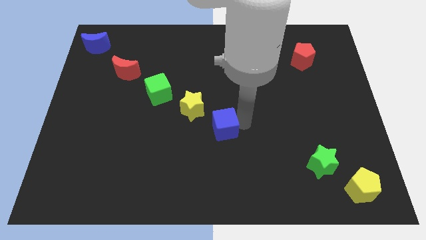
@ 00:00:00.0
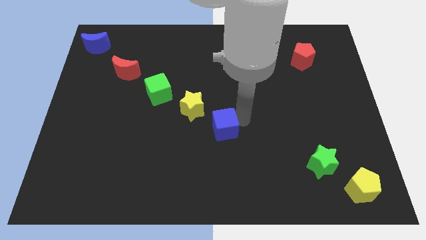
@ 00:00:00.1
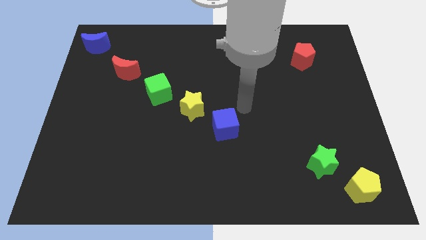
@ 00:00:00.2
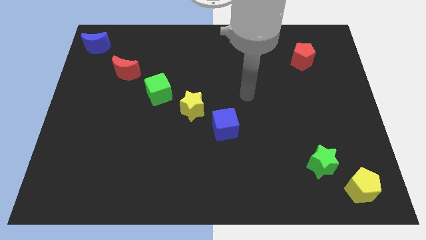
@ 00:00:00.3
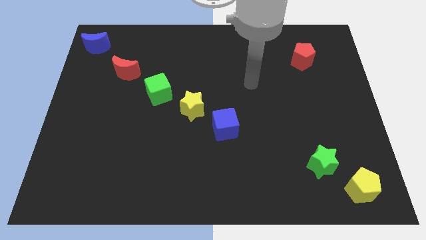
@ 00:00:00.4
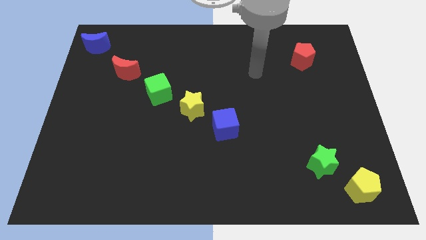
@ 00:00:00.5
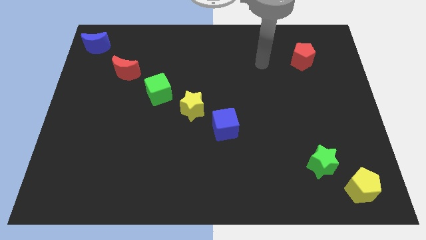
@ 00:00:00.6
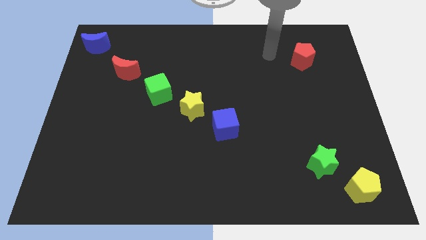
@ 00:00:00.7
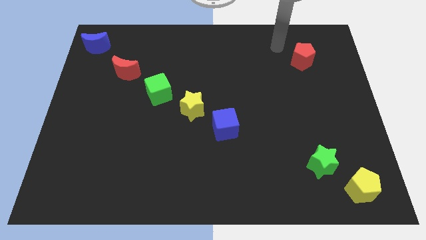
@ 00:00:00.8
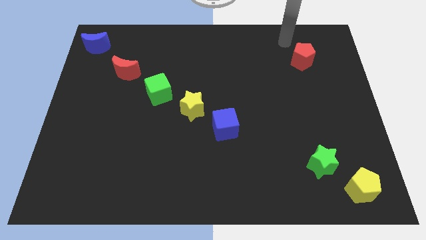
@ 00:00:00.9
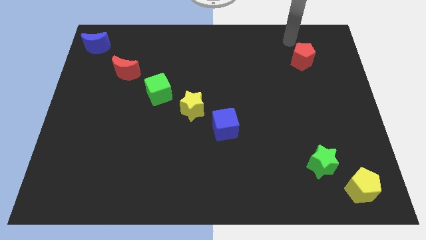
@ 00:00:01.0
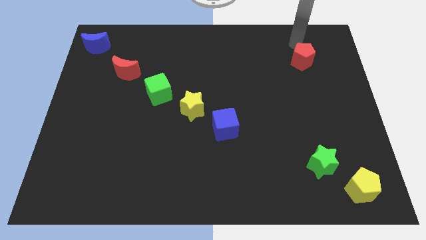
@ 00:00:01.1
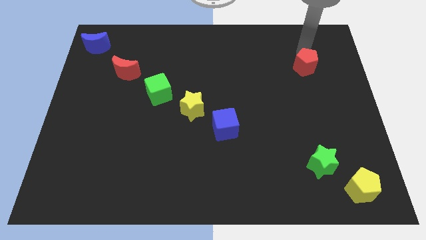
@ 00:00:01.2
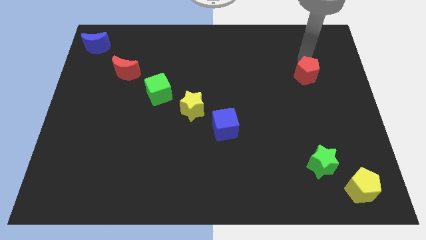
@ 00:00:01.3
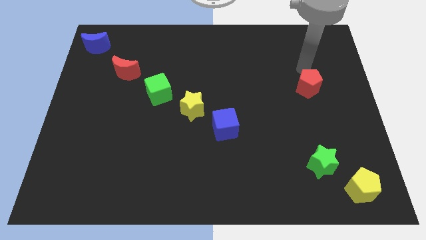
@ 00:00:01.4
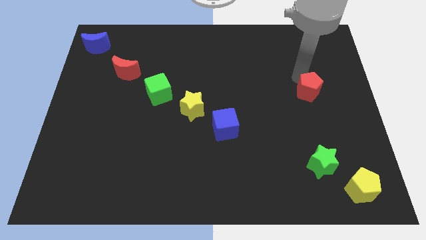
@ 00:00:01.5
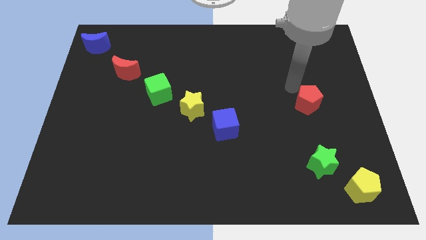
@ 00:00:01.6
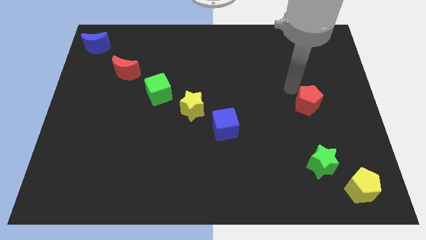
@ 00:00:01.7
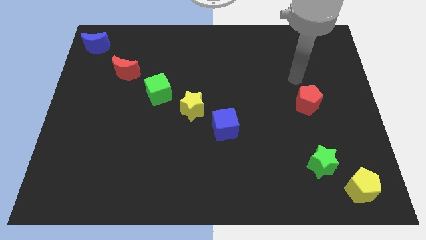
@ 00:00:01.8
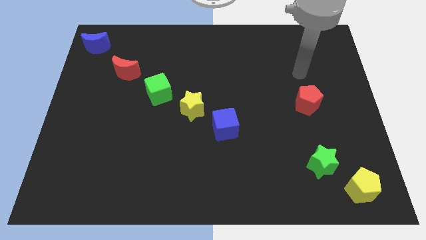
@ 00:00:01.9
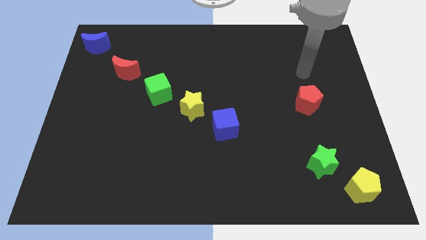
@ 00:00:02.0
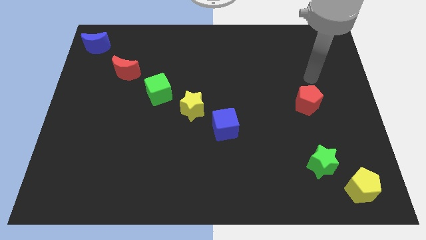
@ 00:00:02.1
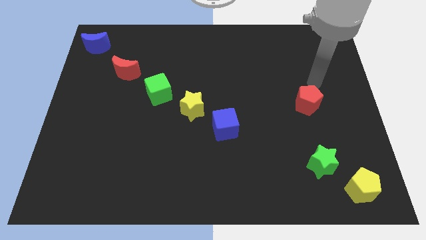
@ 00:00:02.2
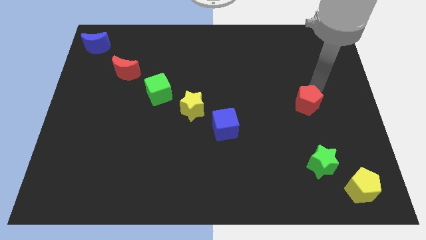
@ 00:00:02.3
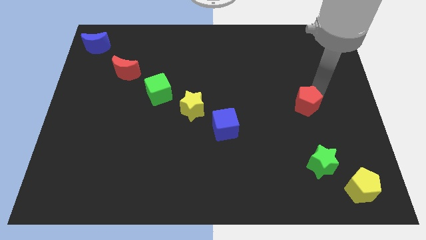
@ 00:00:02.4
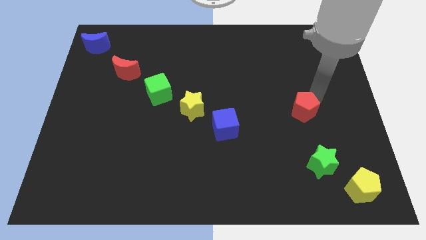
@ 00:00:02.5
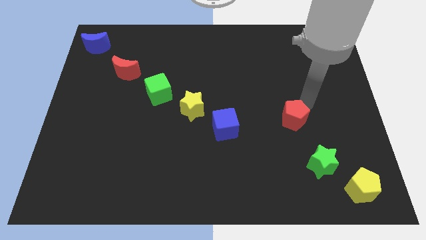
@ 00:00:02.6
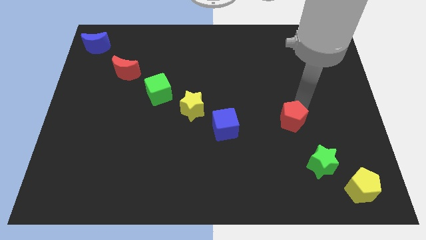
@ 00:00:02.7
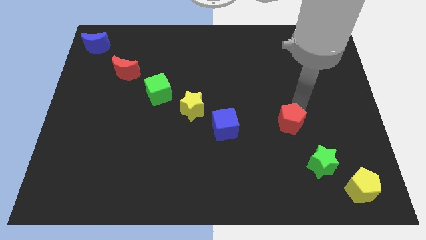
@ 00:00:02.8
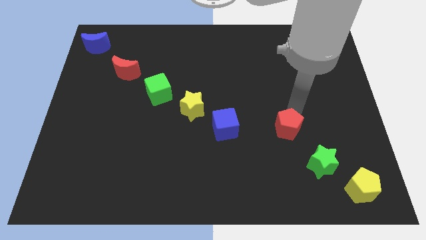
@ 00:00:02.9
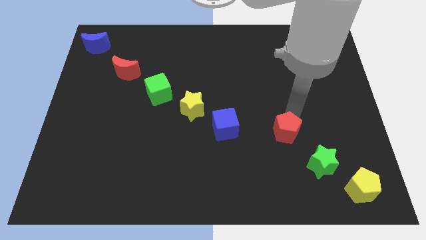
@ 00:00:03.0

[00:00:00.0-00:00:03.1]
slide red pentagon to the right of blue cube

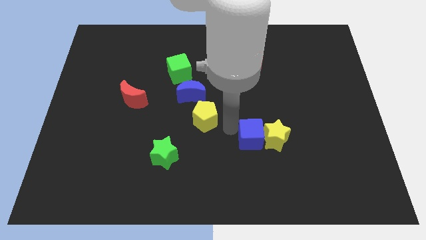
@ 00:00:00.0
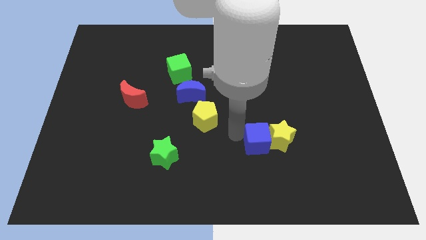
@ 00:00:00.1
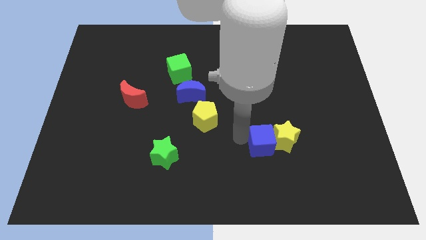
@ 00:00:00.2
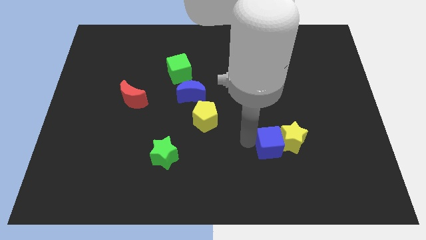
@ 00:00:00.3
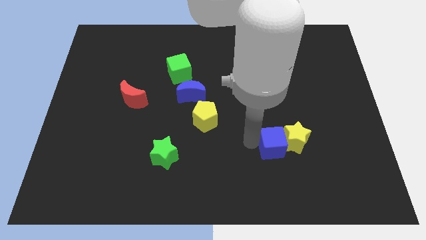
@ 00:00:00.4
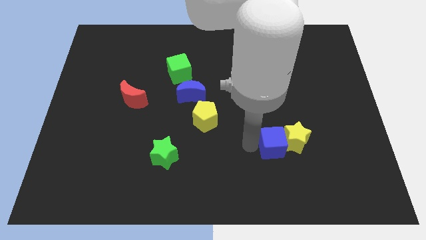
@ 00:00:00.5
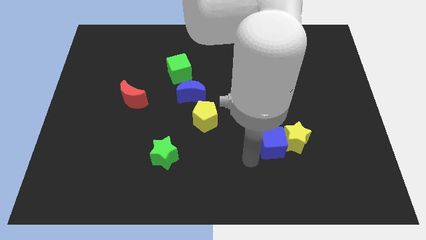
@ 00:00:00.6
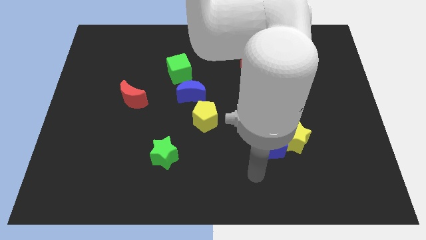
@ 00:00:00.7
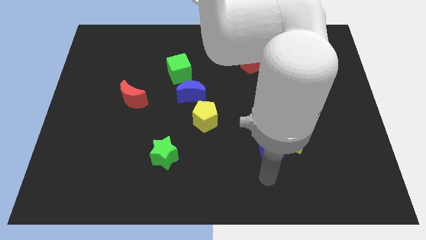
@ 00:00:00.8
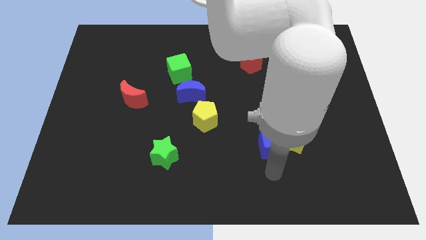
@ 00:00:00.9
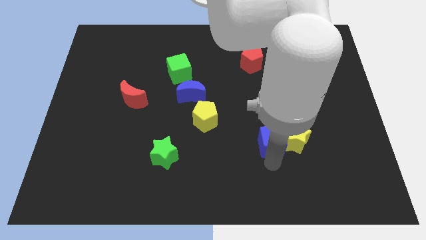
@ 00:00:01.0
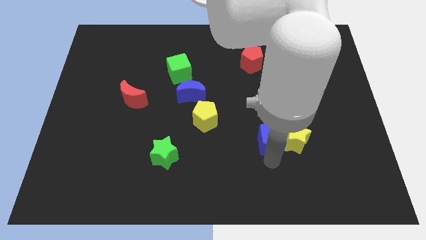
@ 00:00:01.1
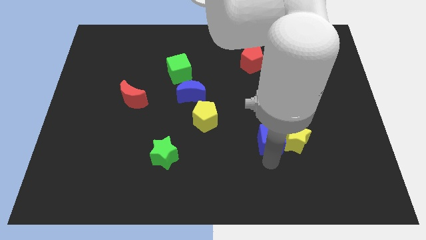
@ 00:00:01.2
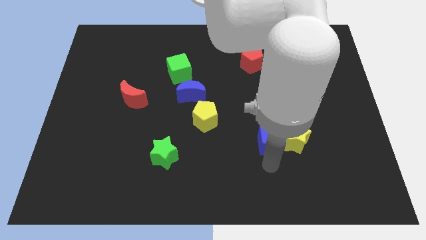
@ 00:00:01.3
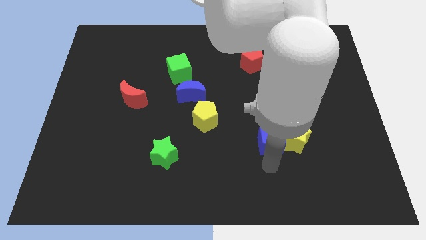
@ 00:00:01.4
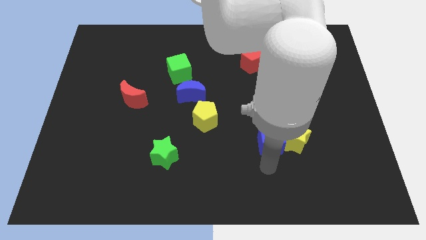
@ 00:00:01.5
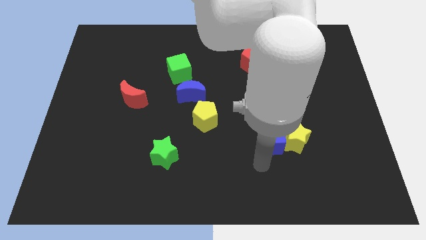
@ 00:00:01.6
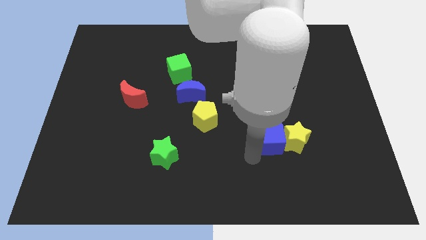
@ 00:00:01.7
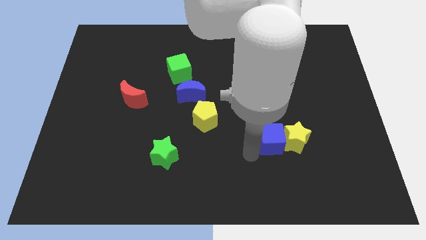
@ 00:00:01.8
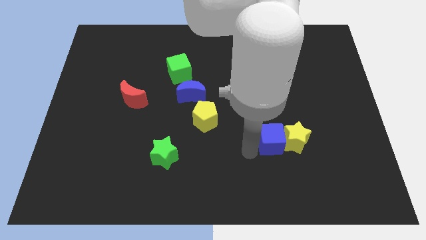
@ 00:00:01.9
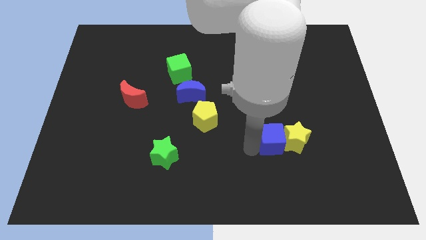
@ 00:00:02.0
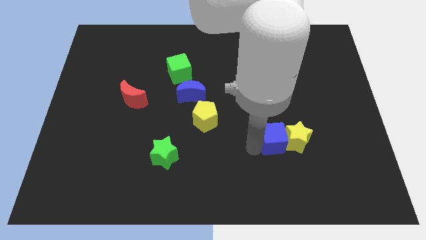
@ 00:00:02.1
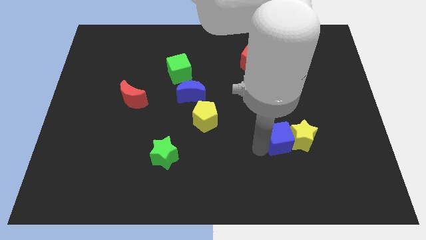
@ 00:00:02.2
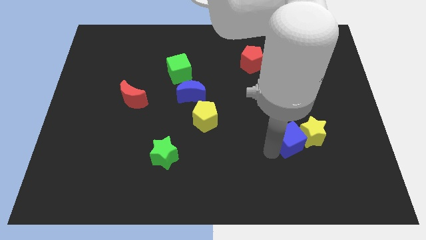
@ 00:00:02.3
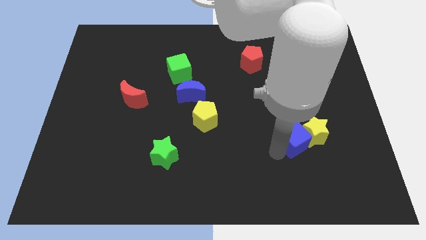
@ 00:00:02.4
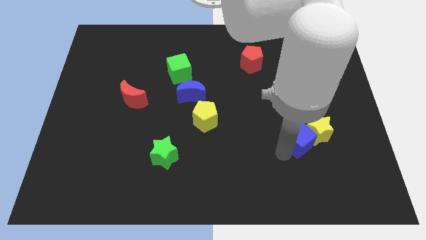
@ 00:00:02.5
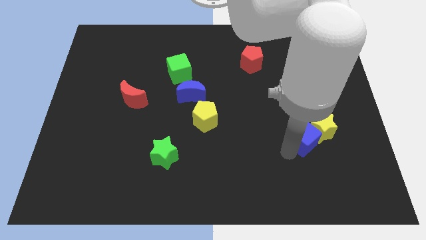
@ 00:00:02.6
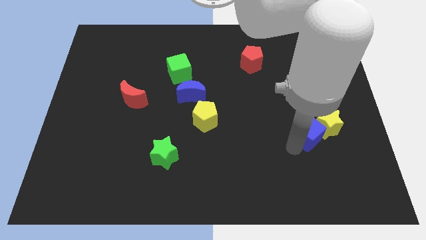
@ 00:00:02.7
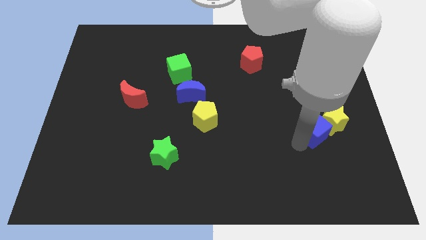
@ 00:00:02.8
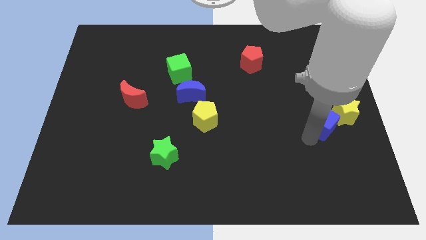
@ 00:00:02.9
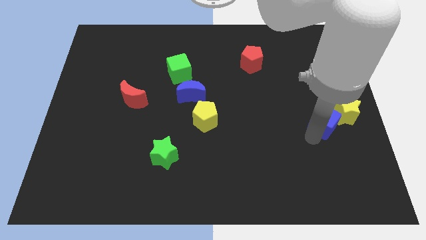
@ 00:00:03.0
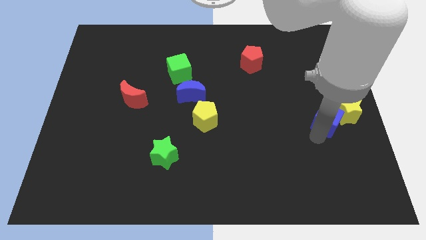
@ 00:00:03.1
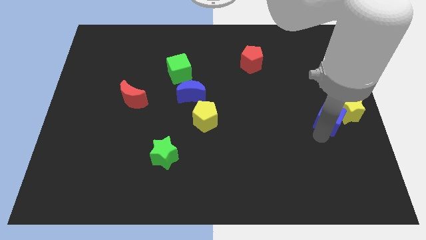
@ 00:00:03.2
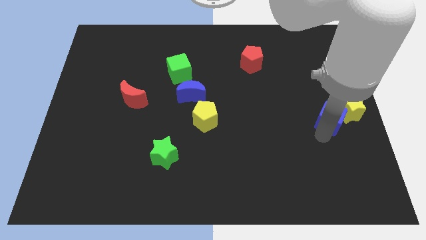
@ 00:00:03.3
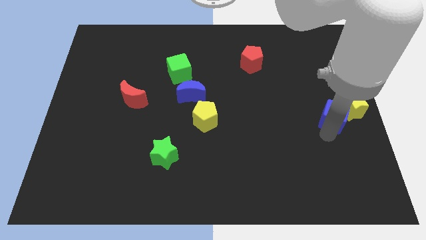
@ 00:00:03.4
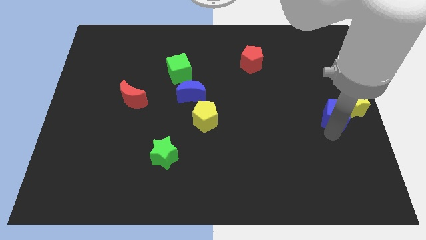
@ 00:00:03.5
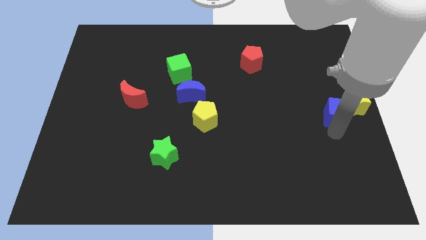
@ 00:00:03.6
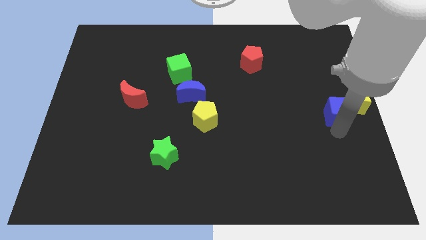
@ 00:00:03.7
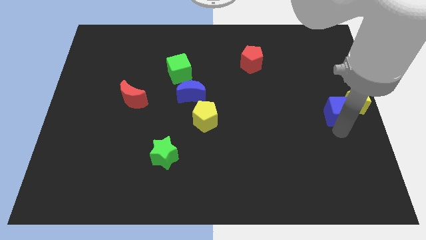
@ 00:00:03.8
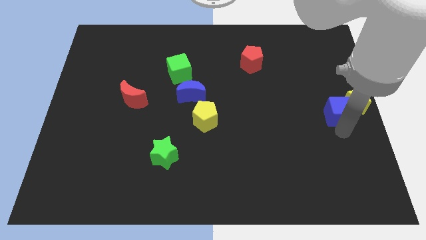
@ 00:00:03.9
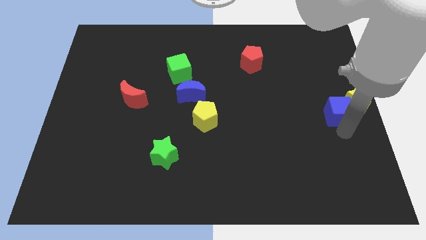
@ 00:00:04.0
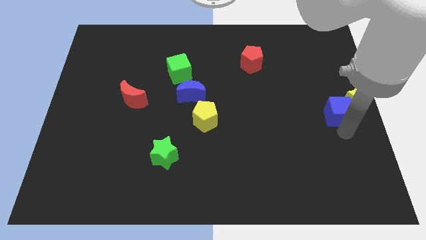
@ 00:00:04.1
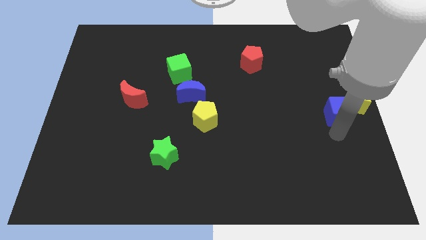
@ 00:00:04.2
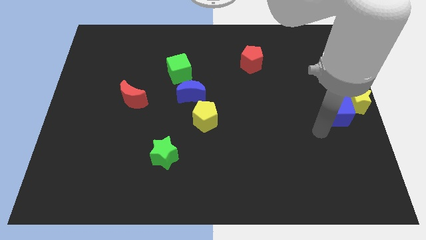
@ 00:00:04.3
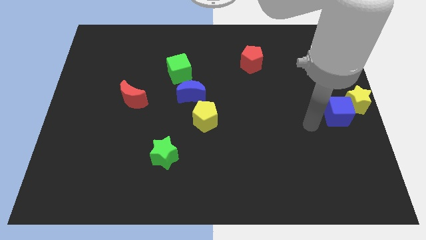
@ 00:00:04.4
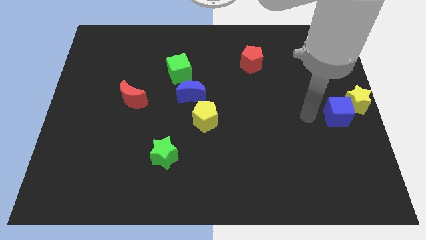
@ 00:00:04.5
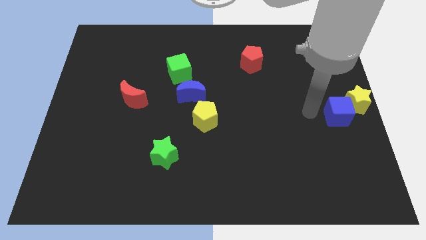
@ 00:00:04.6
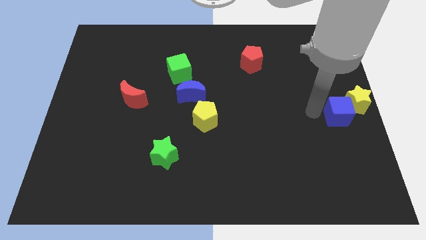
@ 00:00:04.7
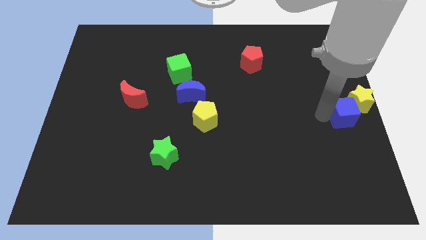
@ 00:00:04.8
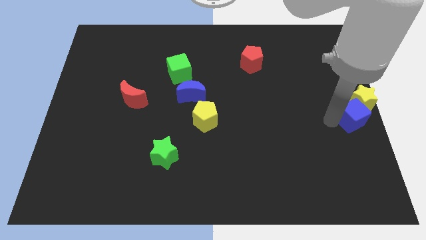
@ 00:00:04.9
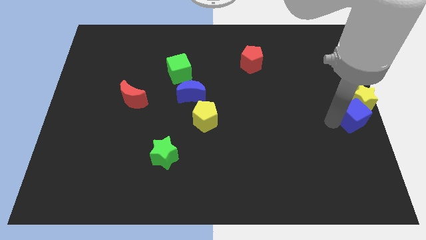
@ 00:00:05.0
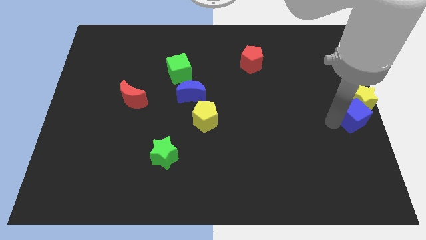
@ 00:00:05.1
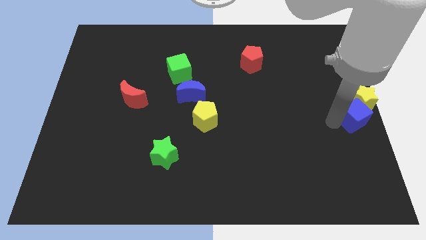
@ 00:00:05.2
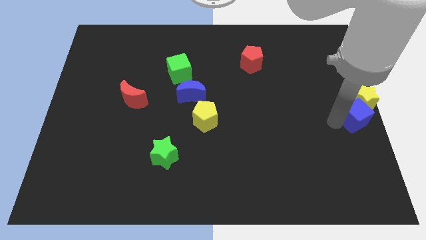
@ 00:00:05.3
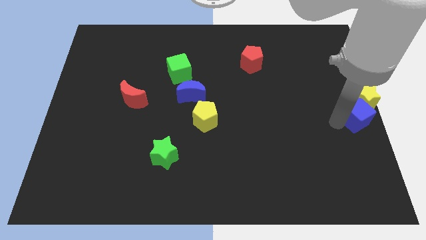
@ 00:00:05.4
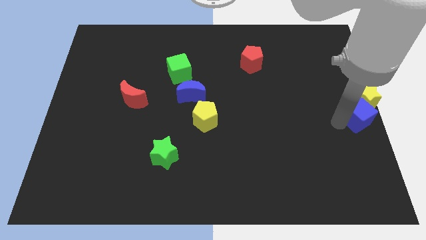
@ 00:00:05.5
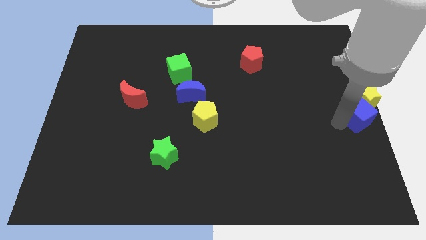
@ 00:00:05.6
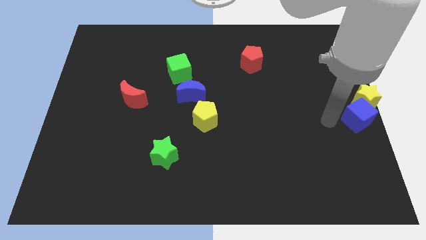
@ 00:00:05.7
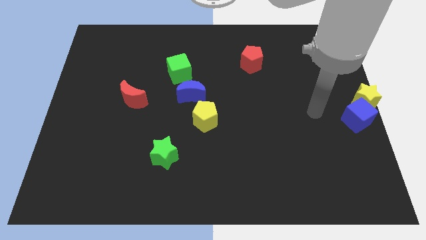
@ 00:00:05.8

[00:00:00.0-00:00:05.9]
move the blue cube along with the yellow star towards the center right side of the board
